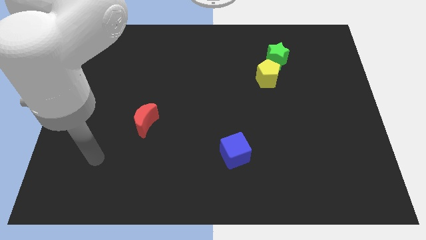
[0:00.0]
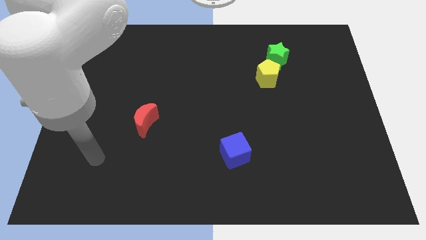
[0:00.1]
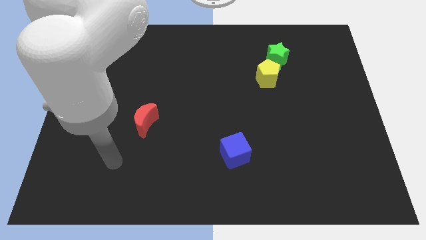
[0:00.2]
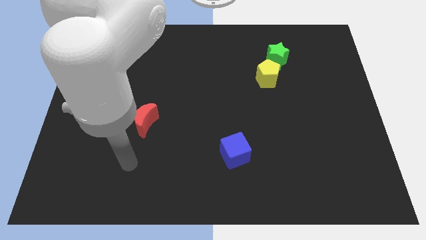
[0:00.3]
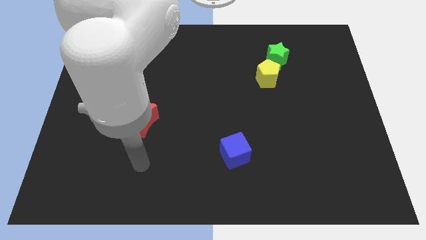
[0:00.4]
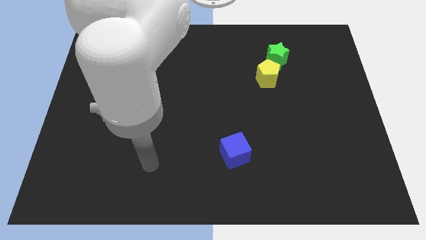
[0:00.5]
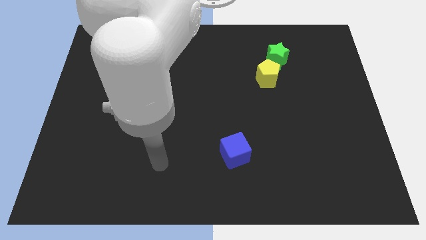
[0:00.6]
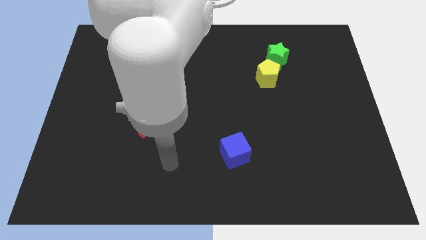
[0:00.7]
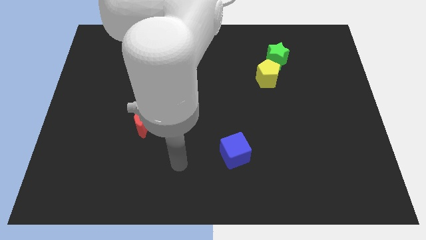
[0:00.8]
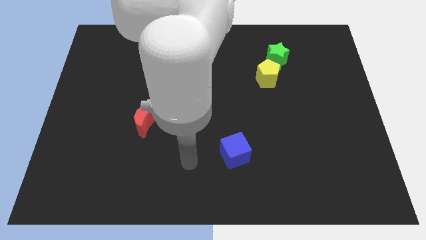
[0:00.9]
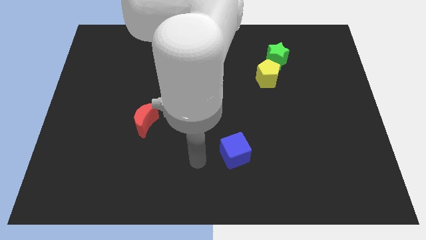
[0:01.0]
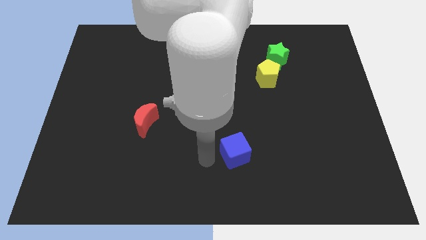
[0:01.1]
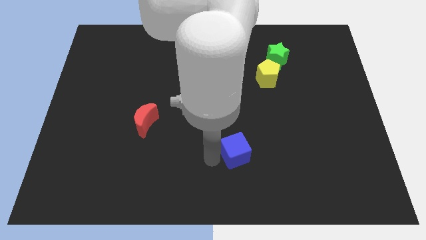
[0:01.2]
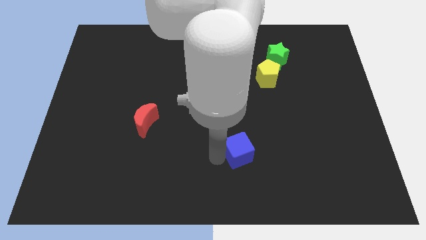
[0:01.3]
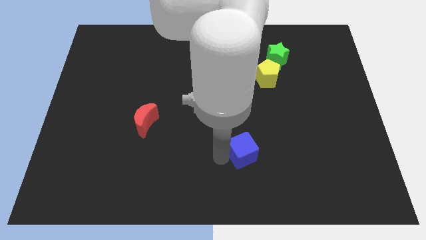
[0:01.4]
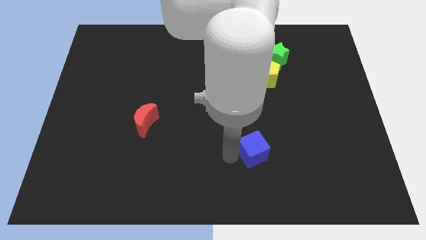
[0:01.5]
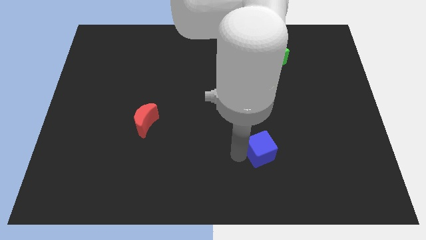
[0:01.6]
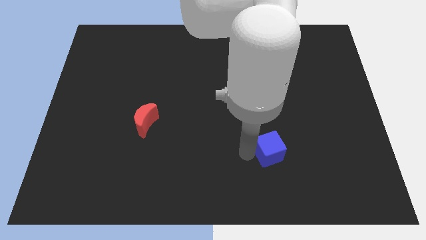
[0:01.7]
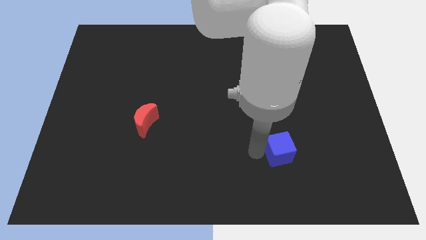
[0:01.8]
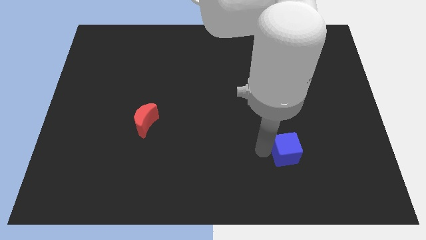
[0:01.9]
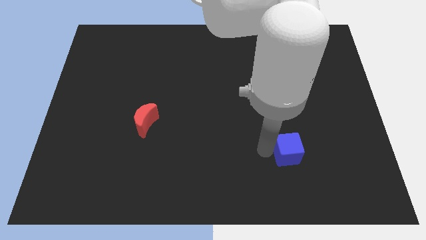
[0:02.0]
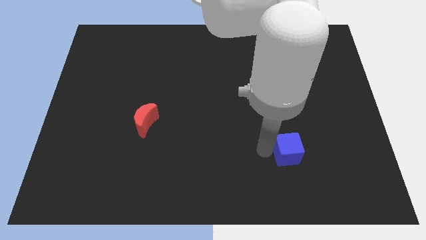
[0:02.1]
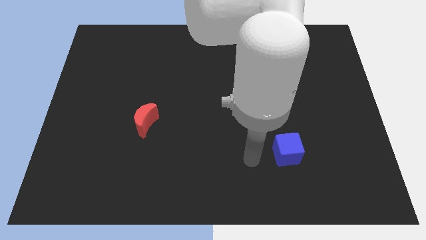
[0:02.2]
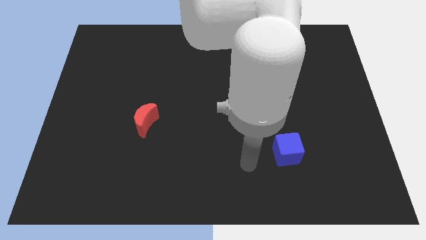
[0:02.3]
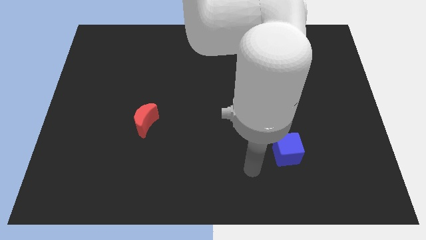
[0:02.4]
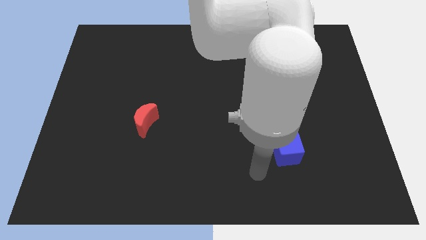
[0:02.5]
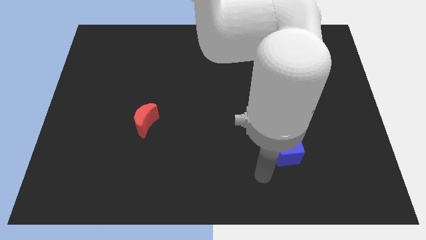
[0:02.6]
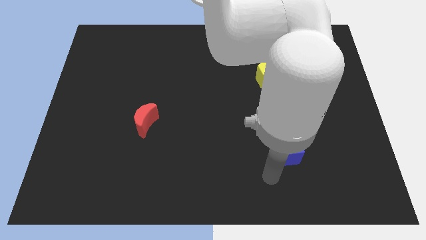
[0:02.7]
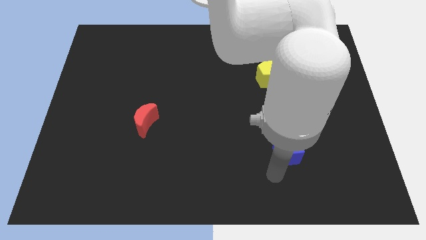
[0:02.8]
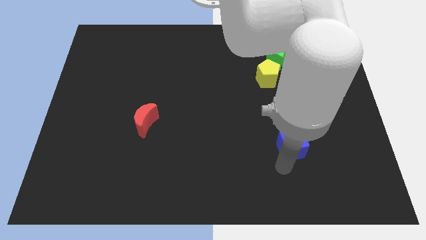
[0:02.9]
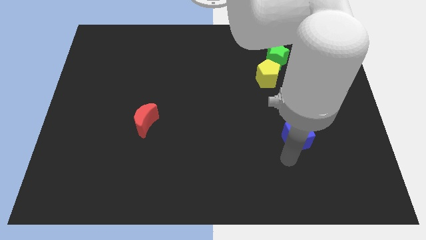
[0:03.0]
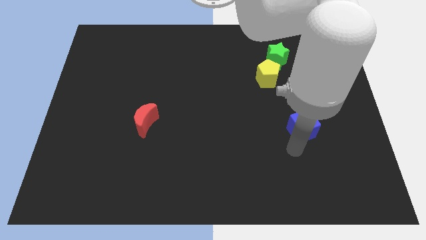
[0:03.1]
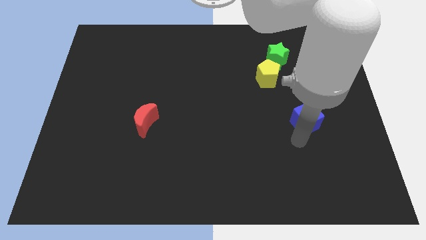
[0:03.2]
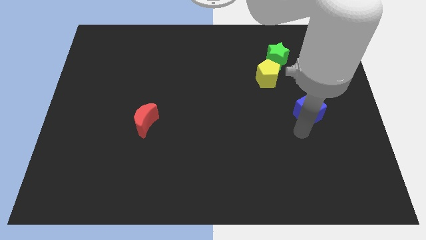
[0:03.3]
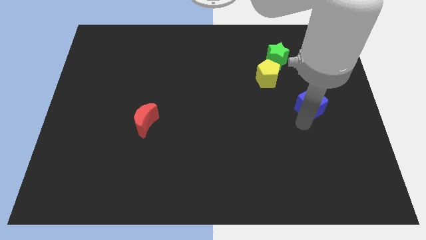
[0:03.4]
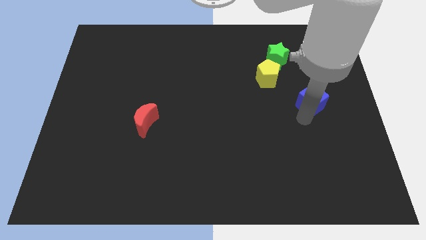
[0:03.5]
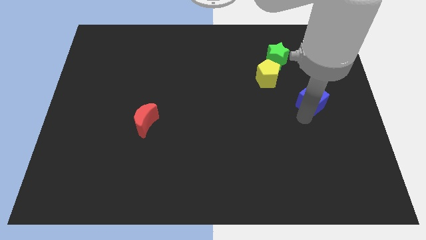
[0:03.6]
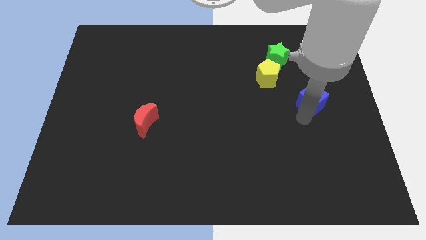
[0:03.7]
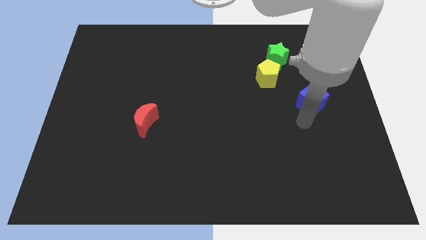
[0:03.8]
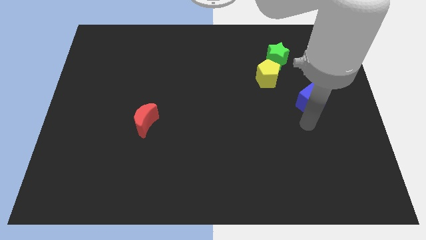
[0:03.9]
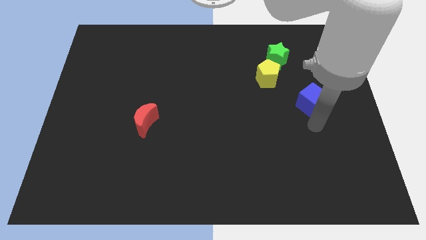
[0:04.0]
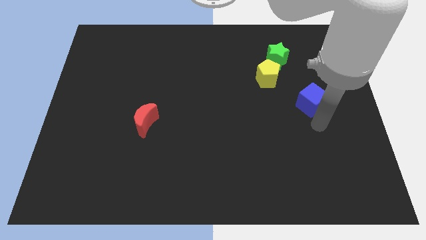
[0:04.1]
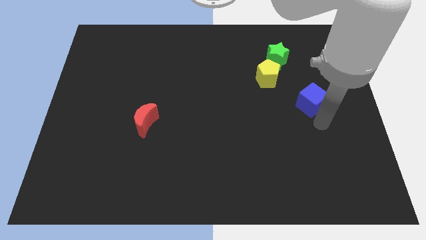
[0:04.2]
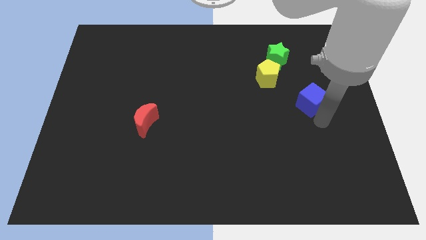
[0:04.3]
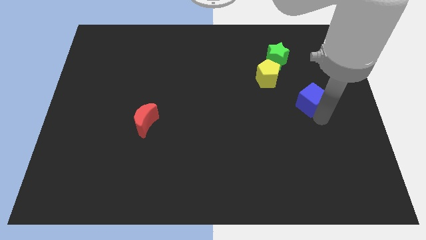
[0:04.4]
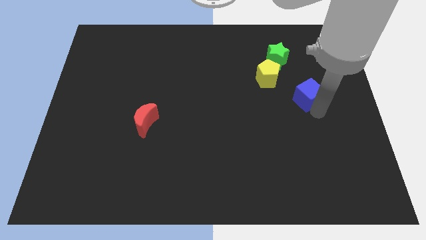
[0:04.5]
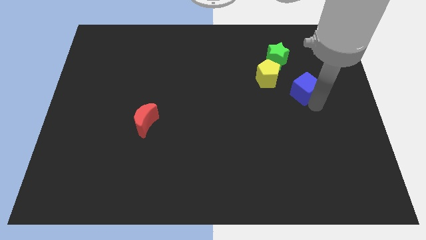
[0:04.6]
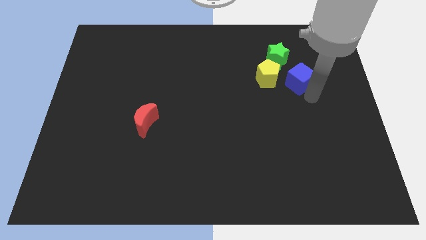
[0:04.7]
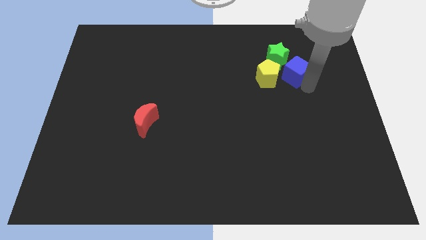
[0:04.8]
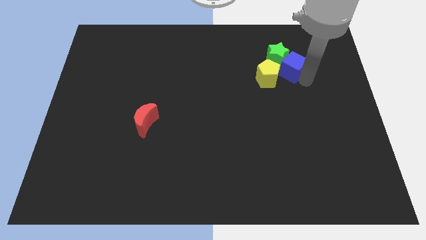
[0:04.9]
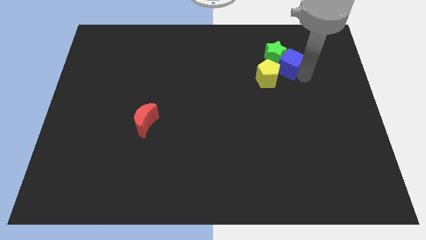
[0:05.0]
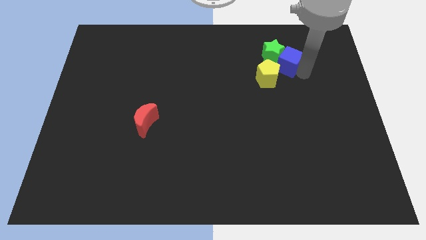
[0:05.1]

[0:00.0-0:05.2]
put the blue cube close to the star

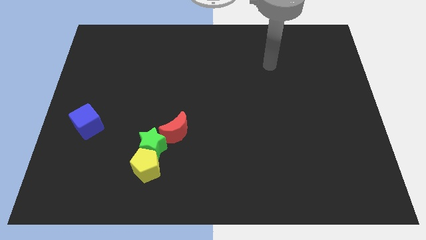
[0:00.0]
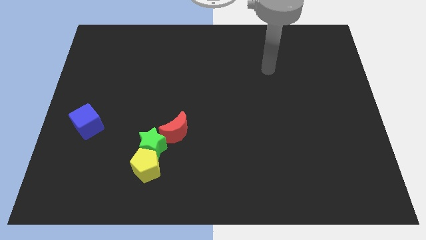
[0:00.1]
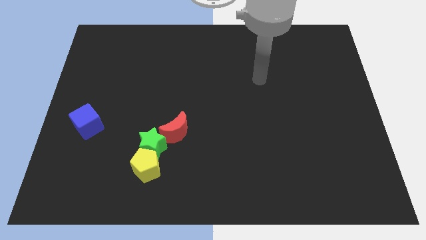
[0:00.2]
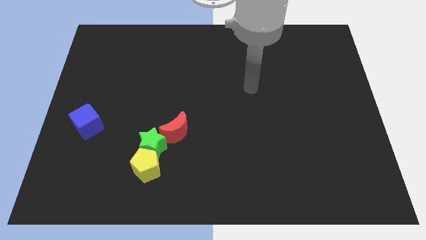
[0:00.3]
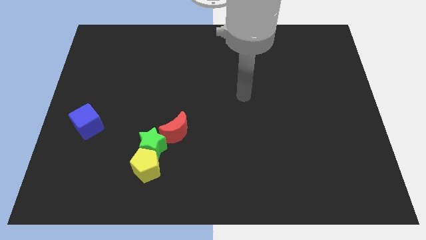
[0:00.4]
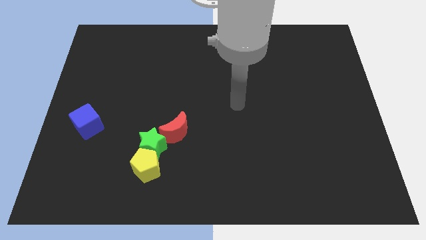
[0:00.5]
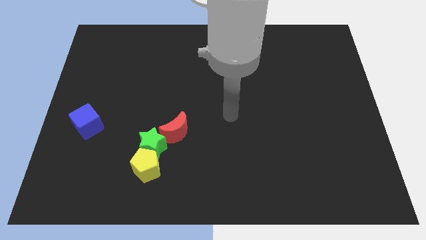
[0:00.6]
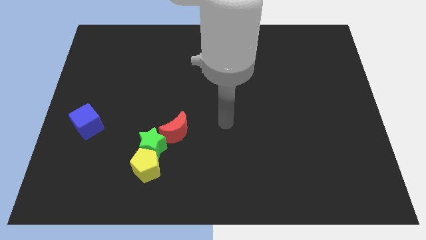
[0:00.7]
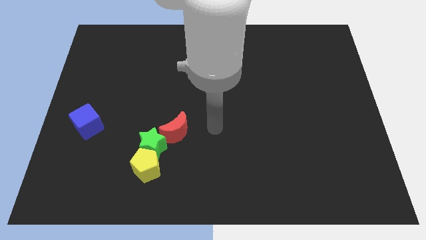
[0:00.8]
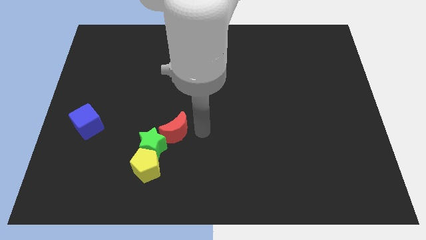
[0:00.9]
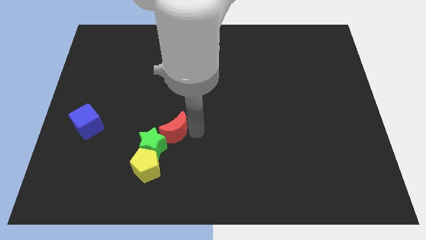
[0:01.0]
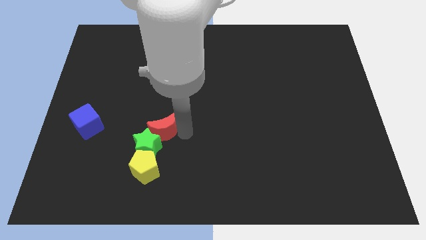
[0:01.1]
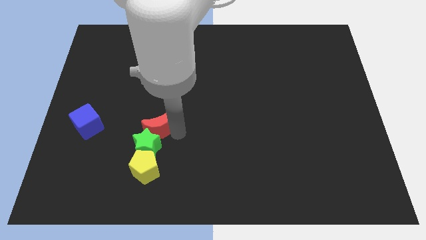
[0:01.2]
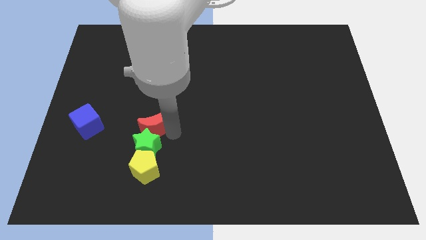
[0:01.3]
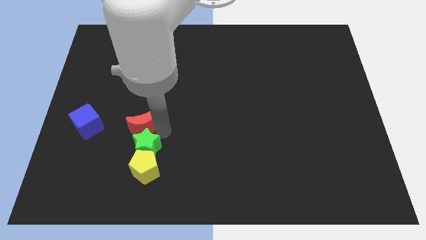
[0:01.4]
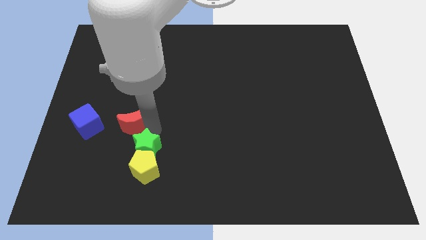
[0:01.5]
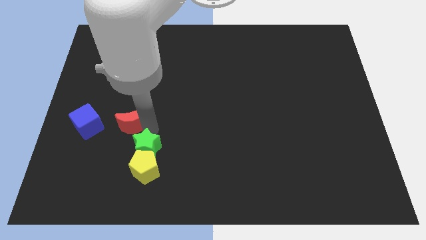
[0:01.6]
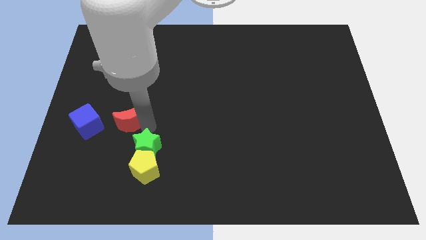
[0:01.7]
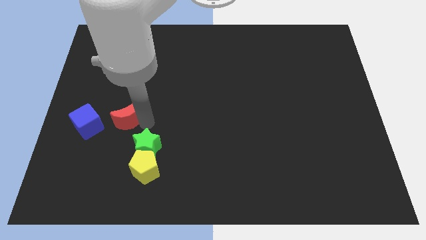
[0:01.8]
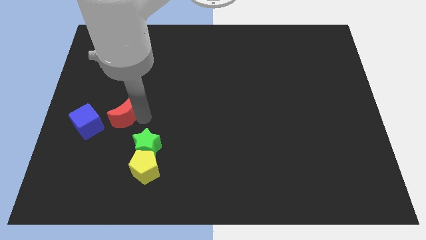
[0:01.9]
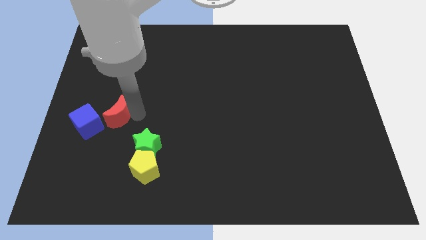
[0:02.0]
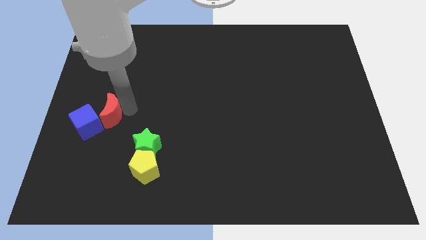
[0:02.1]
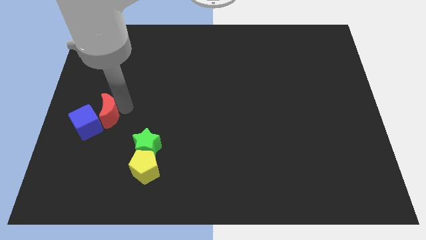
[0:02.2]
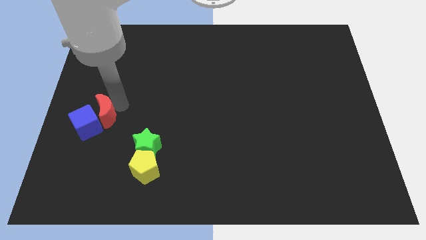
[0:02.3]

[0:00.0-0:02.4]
move the red moon to the blue cube

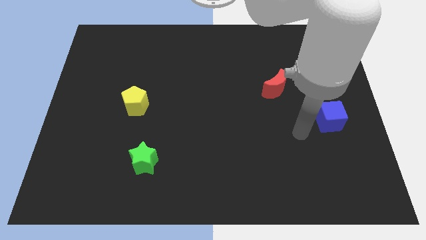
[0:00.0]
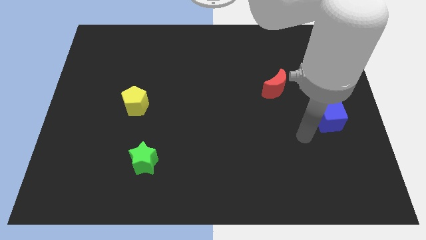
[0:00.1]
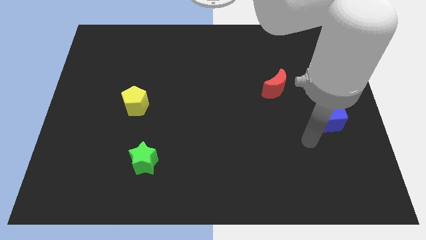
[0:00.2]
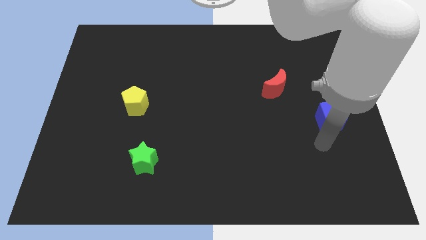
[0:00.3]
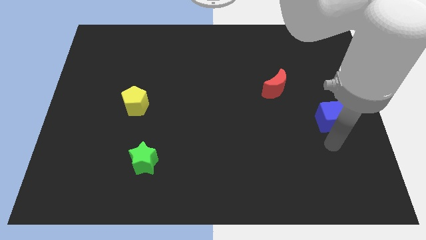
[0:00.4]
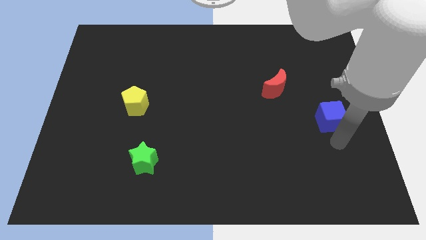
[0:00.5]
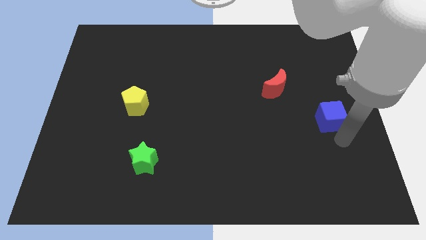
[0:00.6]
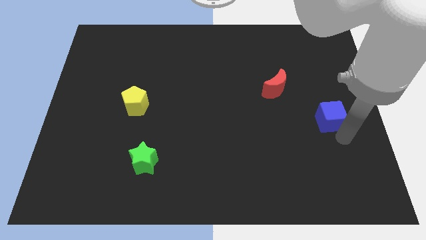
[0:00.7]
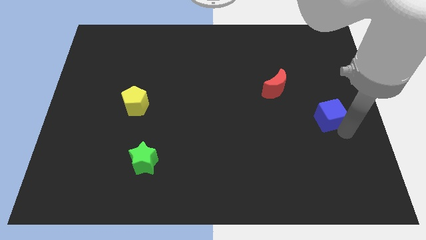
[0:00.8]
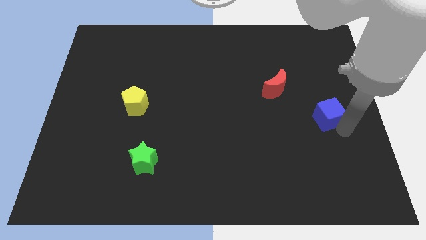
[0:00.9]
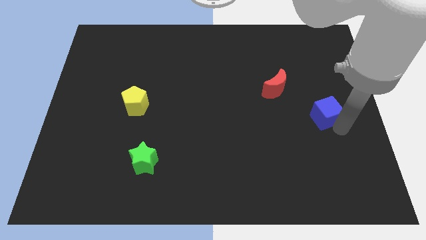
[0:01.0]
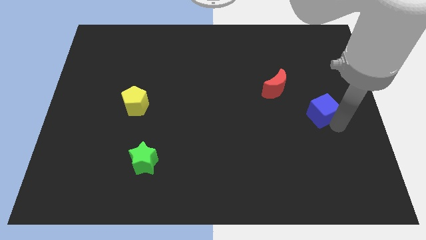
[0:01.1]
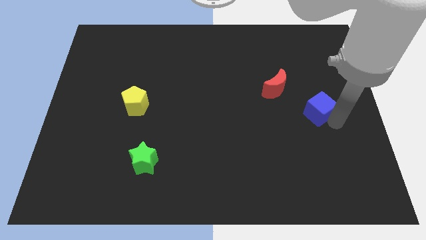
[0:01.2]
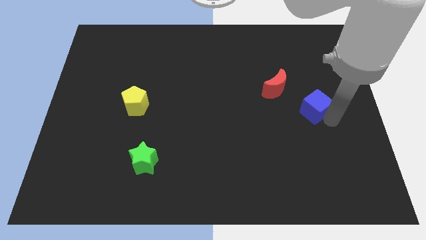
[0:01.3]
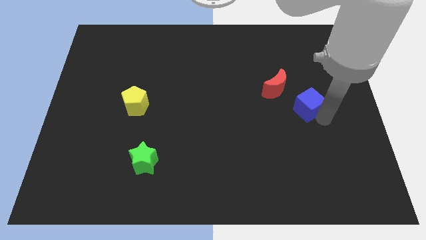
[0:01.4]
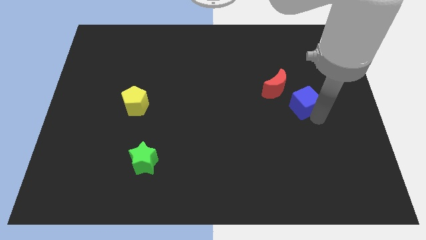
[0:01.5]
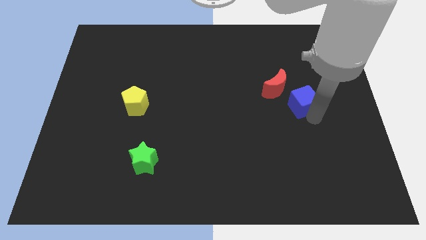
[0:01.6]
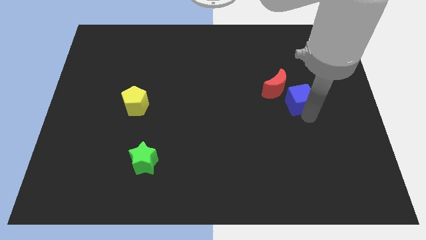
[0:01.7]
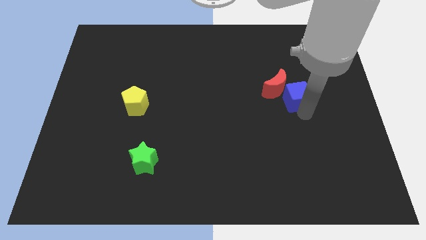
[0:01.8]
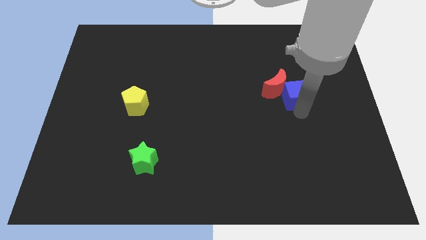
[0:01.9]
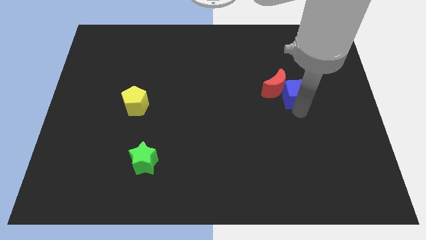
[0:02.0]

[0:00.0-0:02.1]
put the blue block towards the red block
